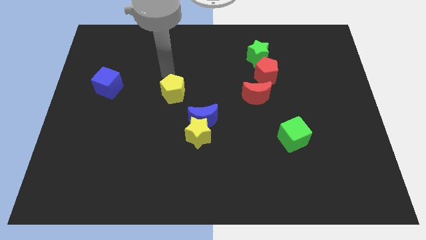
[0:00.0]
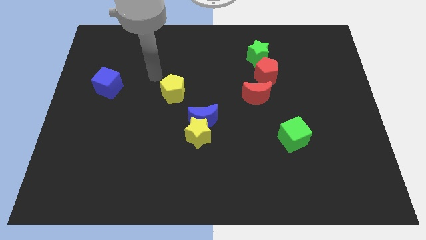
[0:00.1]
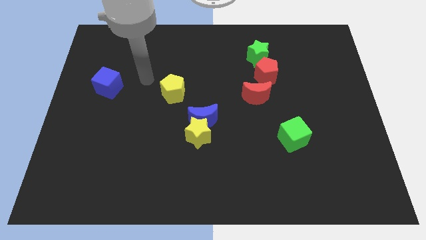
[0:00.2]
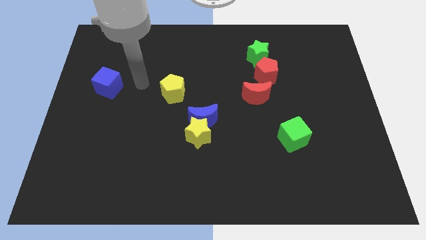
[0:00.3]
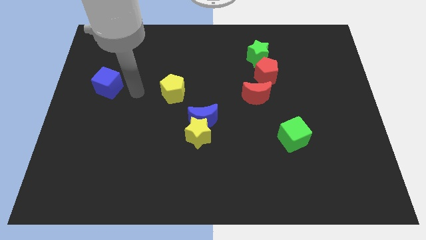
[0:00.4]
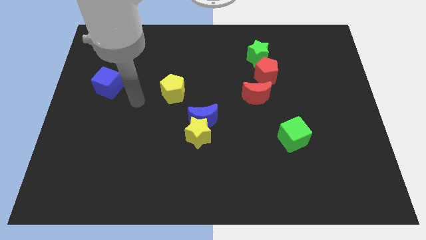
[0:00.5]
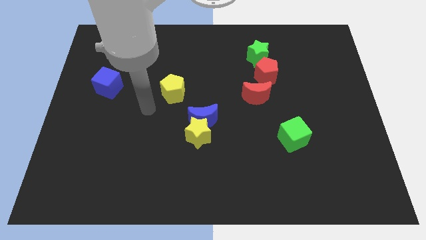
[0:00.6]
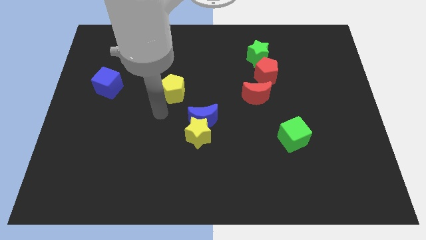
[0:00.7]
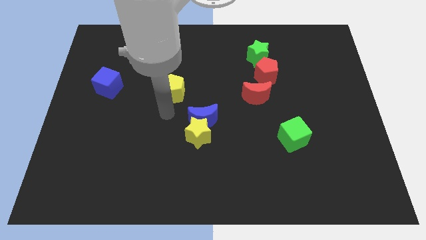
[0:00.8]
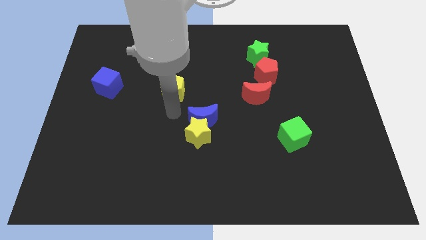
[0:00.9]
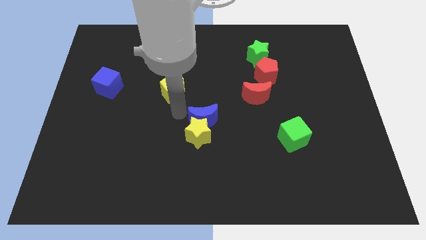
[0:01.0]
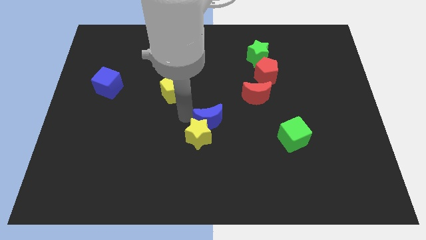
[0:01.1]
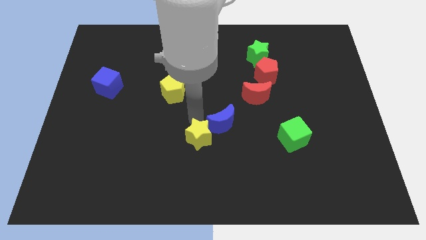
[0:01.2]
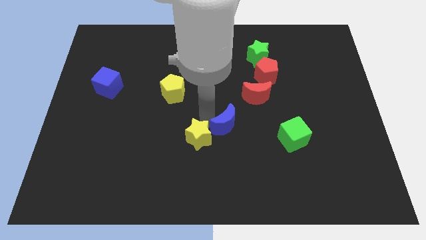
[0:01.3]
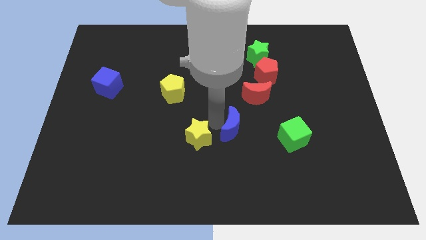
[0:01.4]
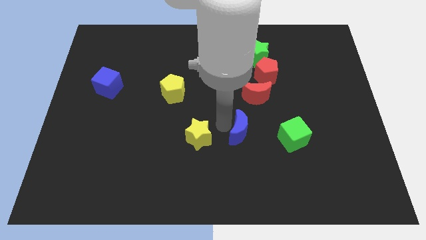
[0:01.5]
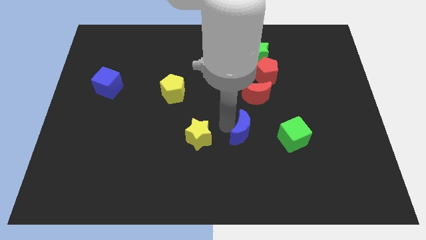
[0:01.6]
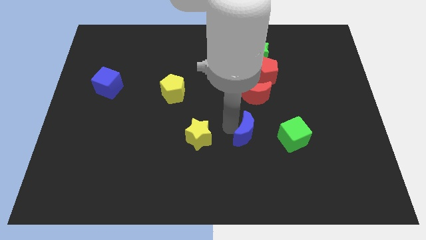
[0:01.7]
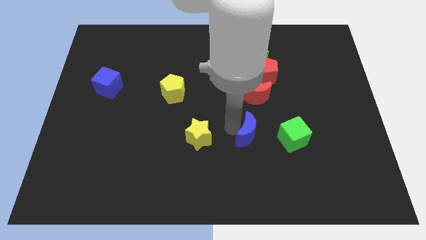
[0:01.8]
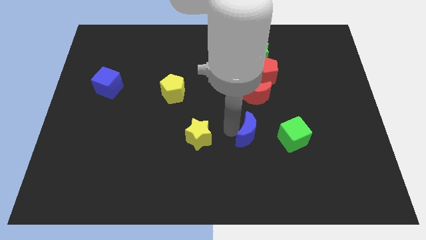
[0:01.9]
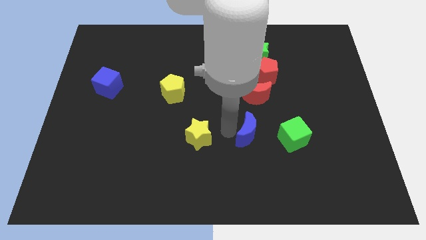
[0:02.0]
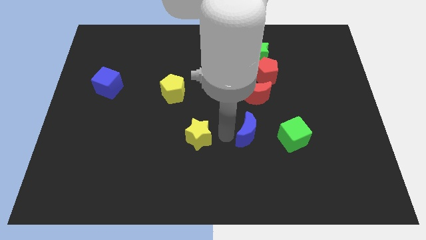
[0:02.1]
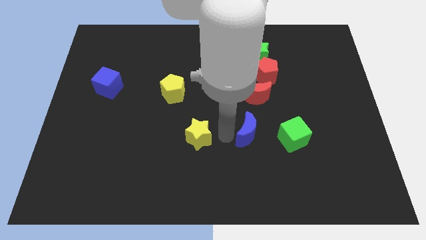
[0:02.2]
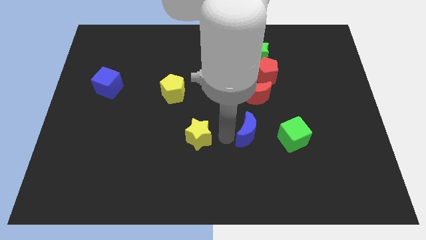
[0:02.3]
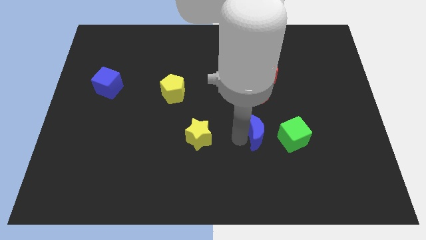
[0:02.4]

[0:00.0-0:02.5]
place blue crescent in between green and yellow block

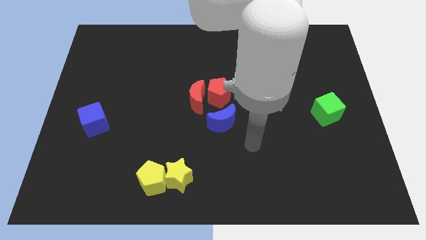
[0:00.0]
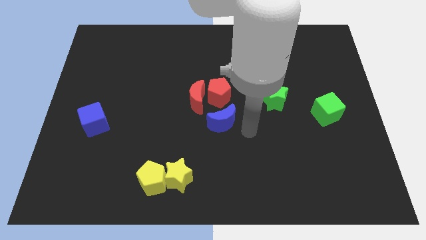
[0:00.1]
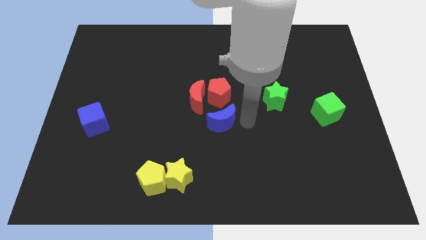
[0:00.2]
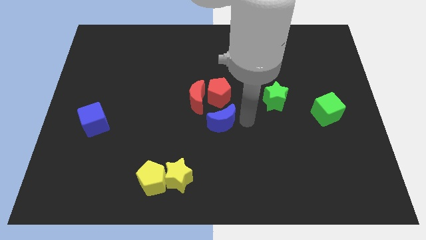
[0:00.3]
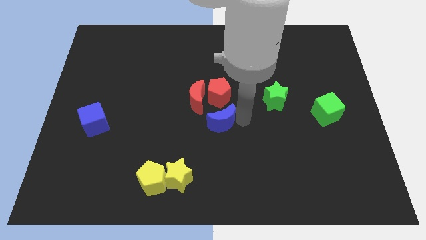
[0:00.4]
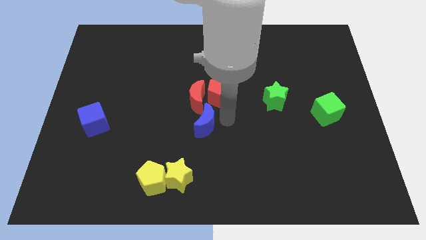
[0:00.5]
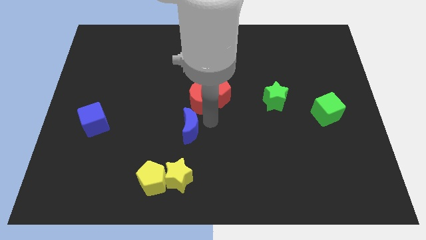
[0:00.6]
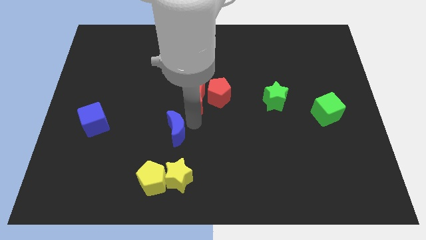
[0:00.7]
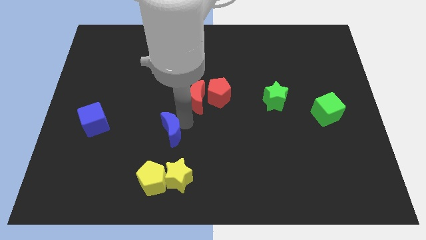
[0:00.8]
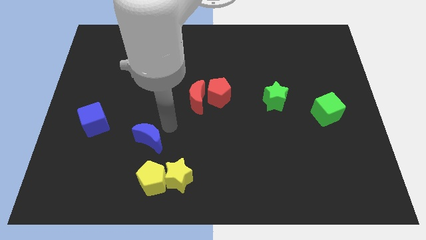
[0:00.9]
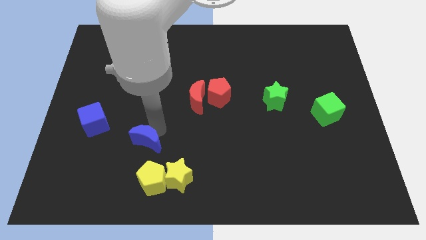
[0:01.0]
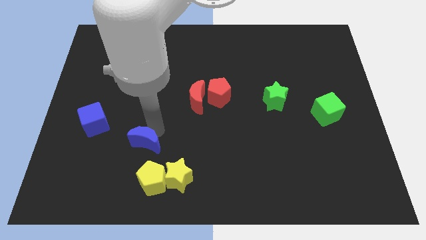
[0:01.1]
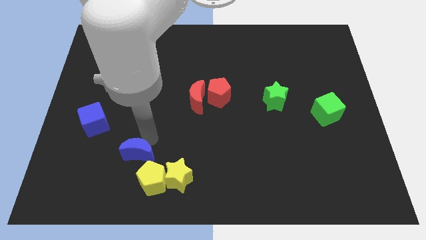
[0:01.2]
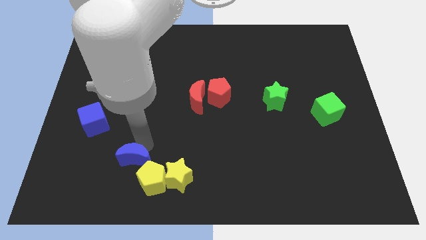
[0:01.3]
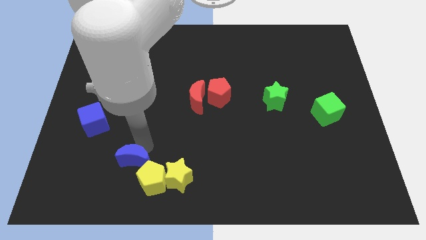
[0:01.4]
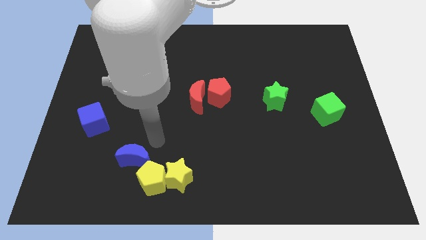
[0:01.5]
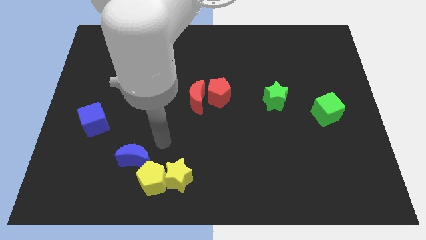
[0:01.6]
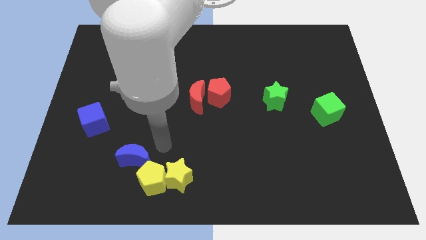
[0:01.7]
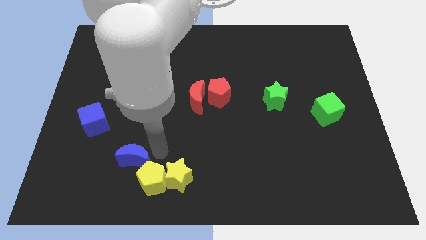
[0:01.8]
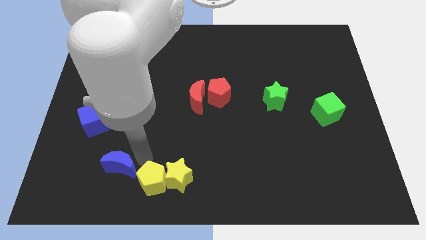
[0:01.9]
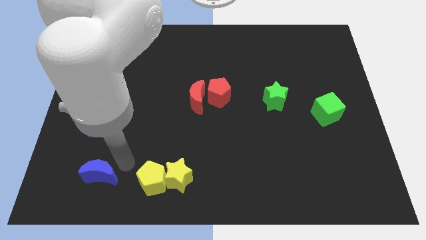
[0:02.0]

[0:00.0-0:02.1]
place the blue moon to the left of the yellow blocks

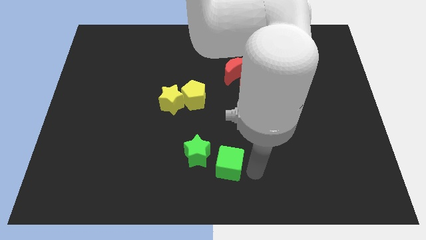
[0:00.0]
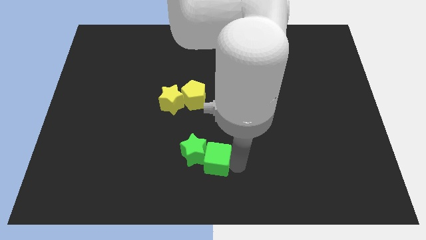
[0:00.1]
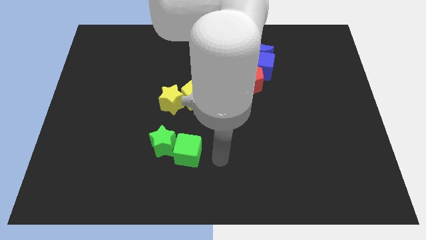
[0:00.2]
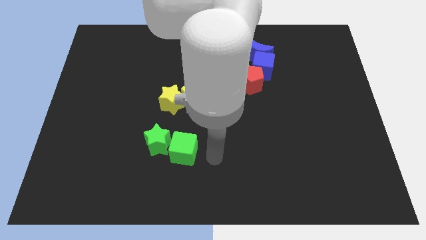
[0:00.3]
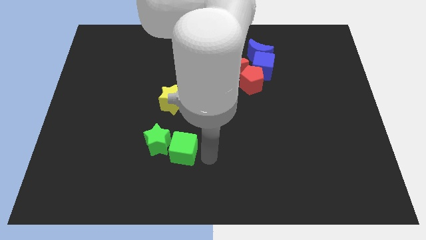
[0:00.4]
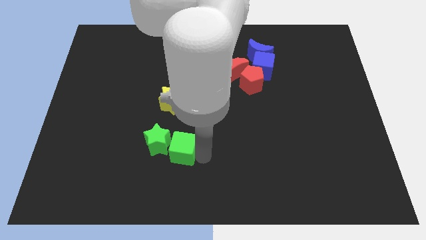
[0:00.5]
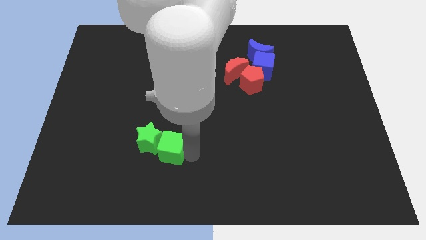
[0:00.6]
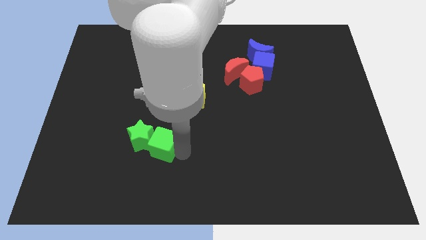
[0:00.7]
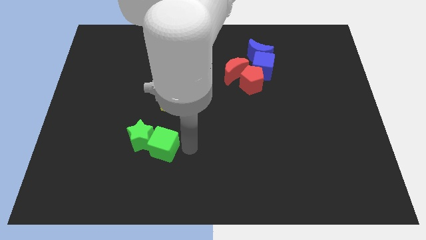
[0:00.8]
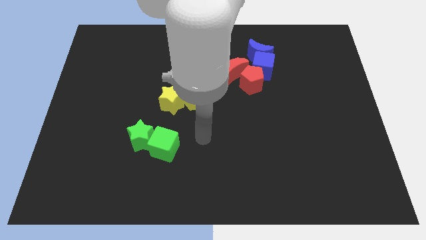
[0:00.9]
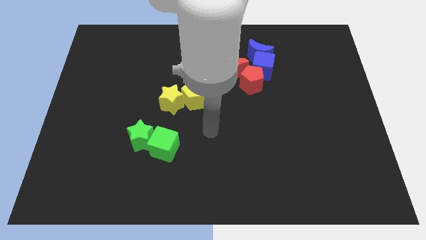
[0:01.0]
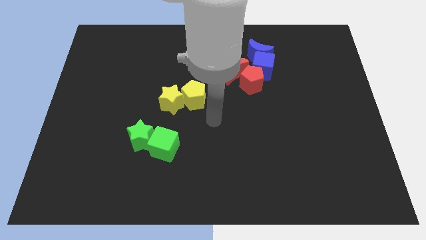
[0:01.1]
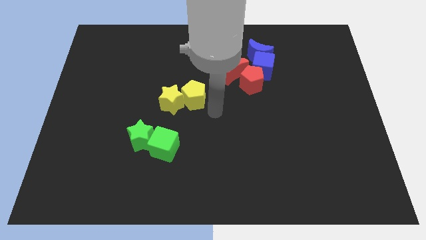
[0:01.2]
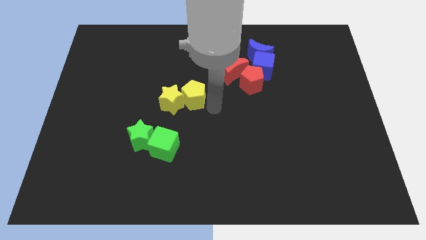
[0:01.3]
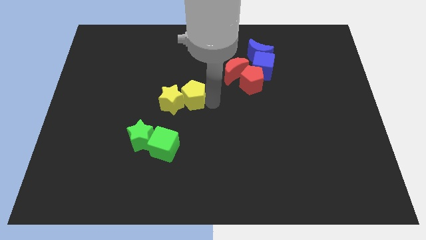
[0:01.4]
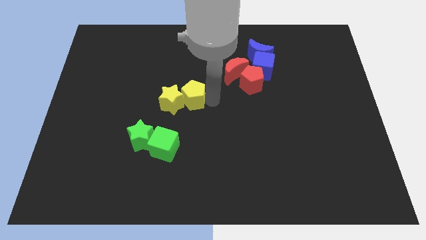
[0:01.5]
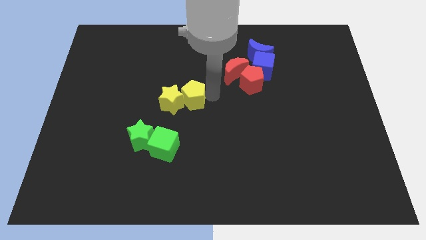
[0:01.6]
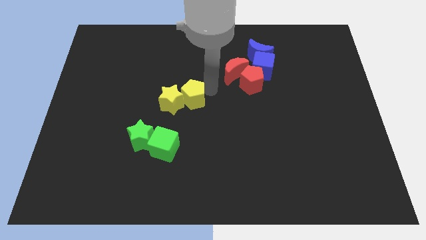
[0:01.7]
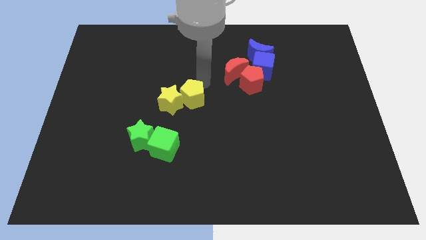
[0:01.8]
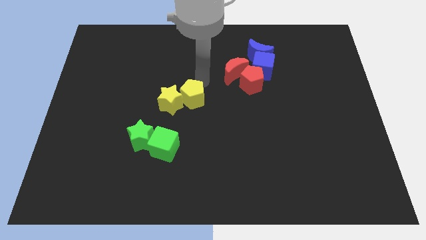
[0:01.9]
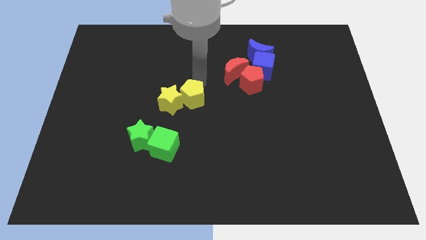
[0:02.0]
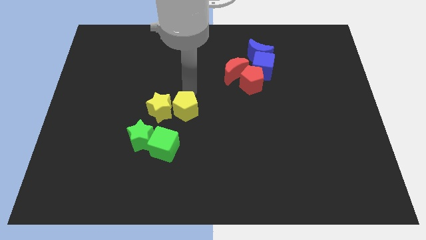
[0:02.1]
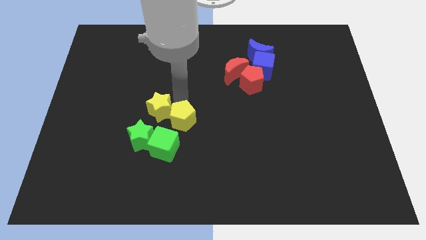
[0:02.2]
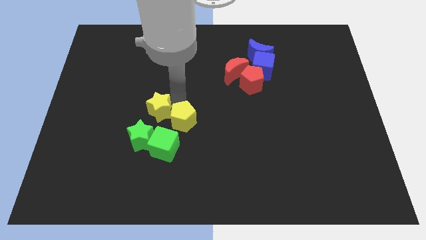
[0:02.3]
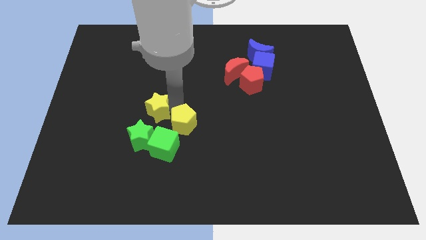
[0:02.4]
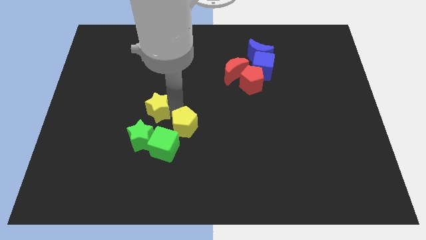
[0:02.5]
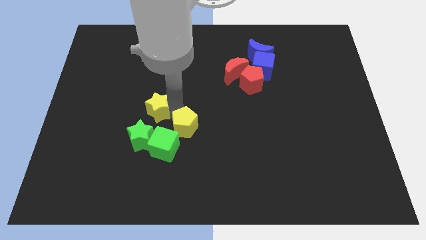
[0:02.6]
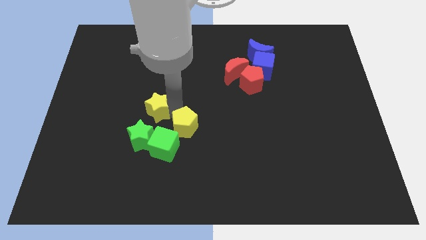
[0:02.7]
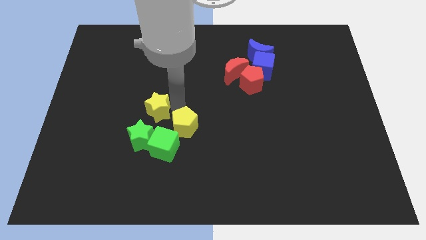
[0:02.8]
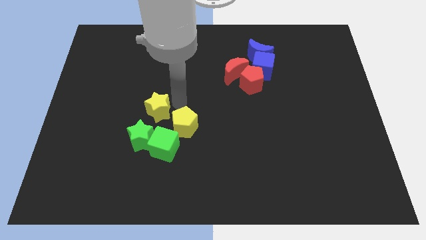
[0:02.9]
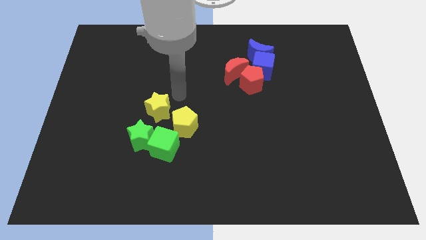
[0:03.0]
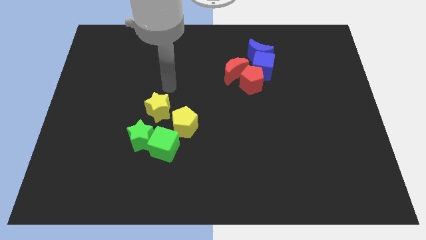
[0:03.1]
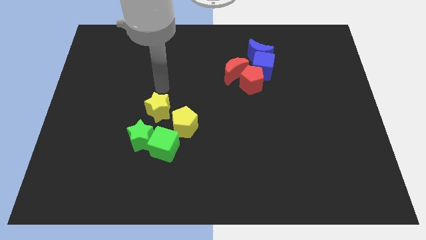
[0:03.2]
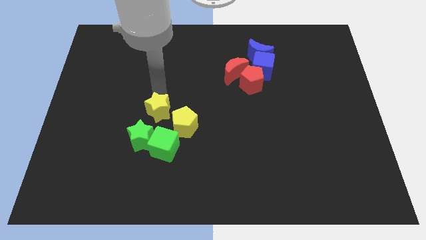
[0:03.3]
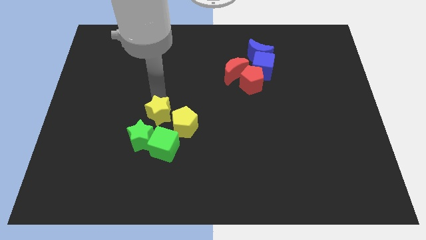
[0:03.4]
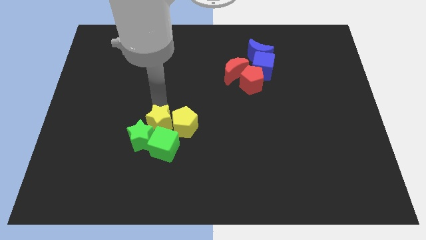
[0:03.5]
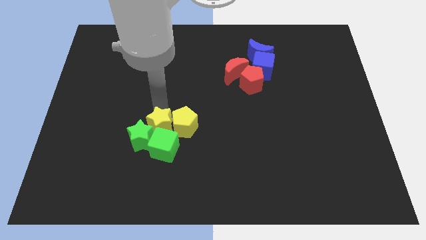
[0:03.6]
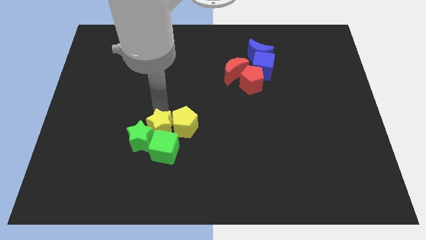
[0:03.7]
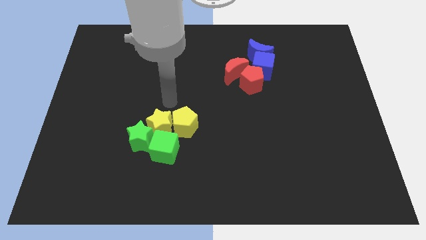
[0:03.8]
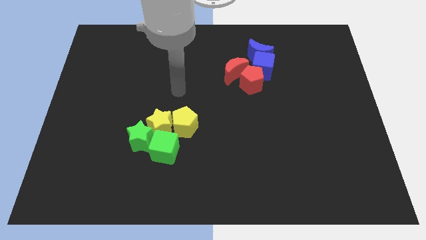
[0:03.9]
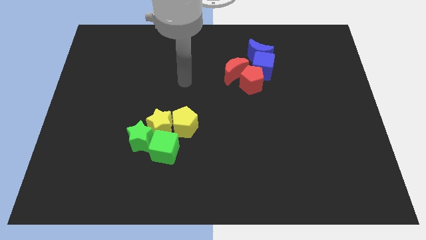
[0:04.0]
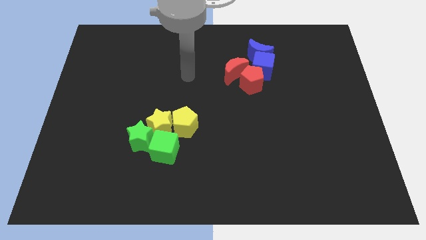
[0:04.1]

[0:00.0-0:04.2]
push the green cube into the green star
